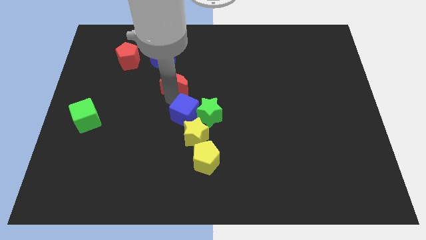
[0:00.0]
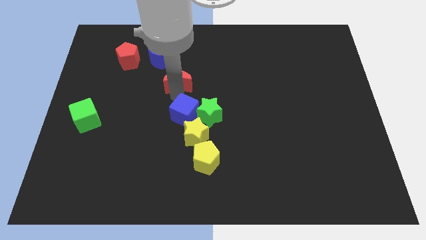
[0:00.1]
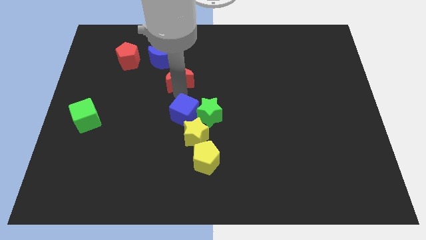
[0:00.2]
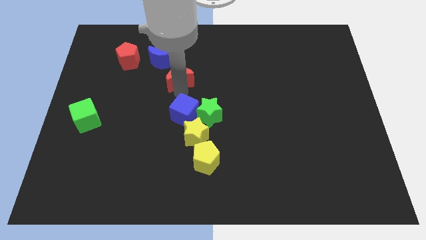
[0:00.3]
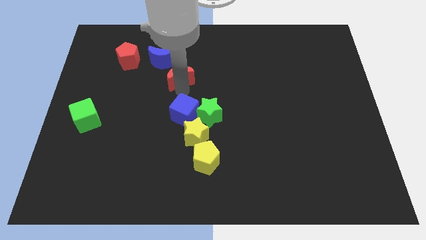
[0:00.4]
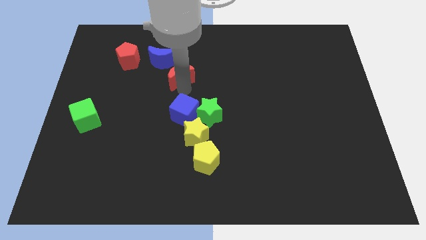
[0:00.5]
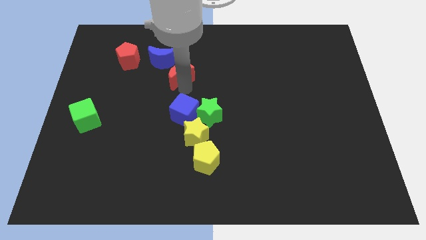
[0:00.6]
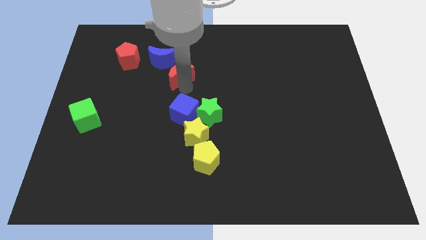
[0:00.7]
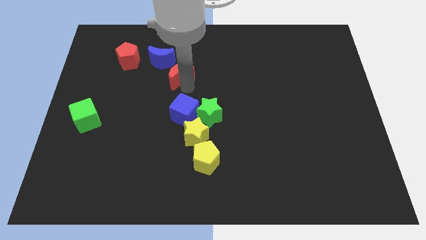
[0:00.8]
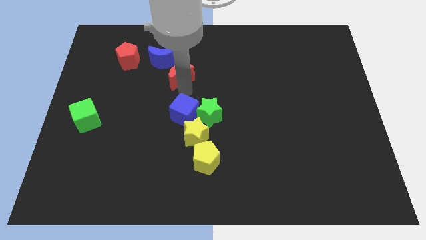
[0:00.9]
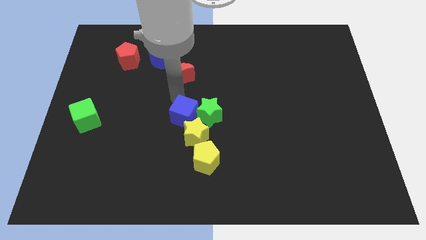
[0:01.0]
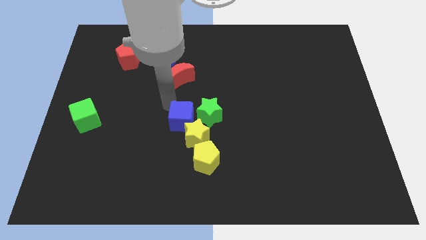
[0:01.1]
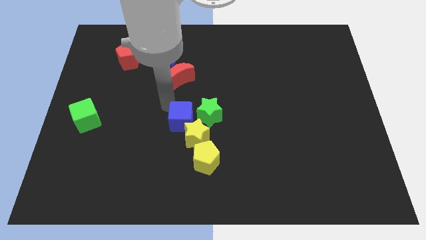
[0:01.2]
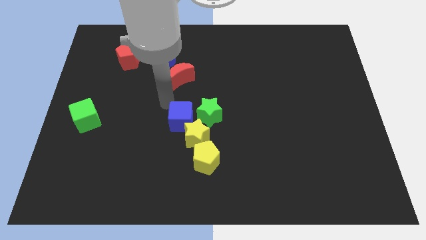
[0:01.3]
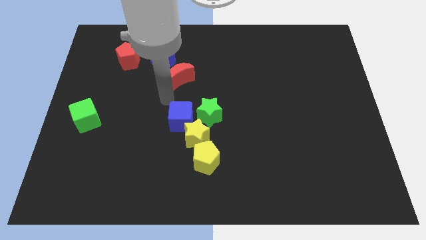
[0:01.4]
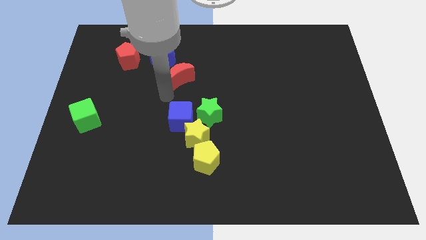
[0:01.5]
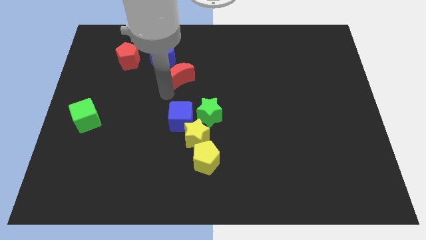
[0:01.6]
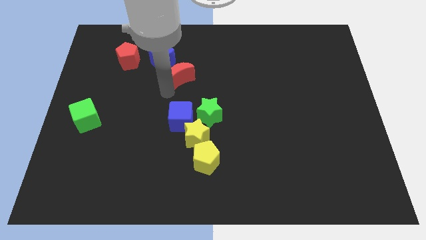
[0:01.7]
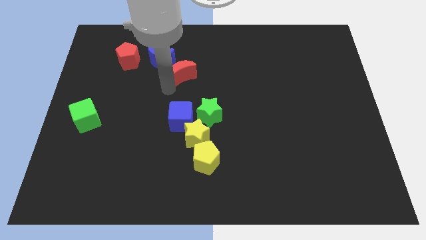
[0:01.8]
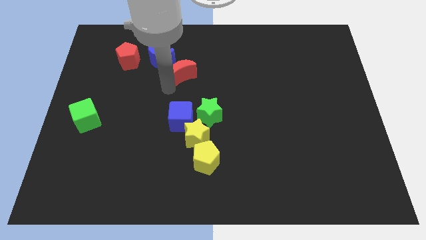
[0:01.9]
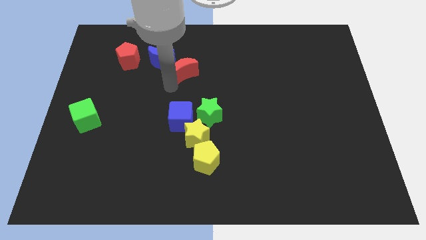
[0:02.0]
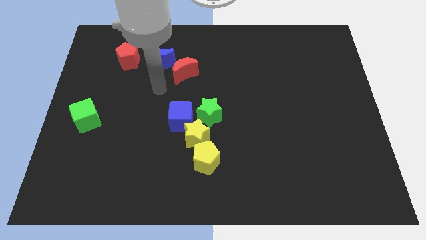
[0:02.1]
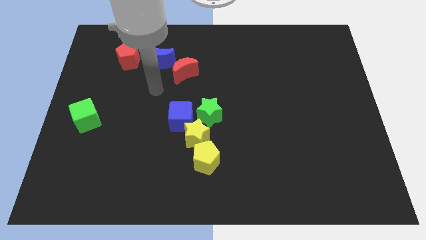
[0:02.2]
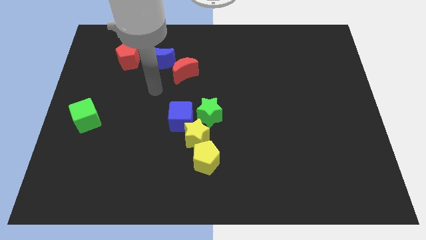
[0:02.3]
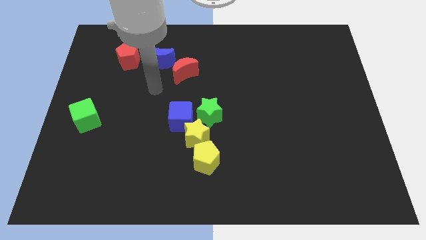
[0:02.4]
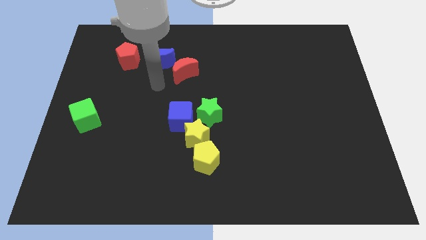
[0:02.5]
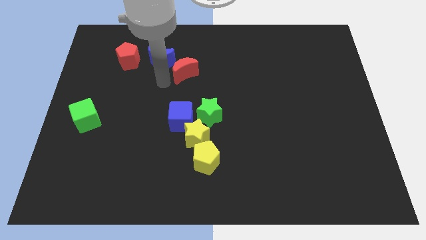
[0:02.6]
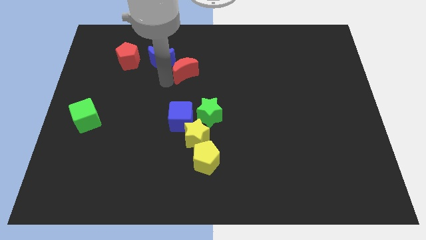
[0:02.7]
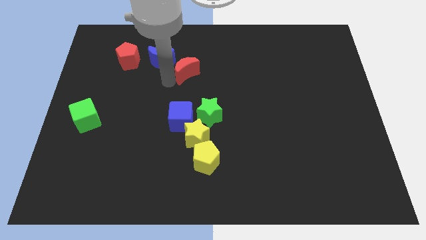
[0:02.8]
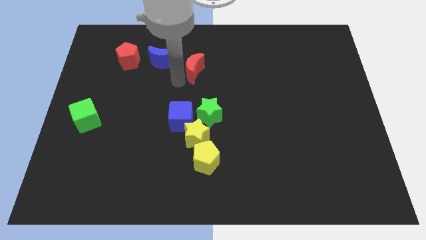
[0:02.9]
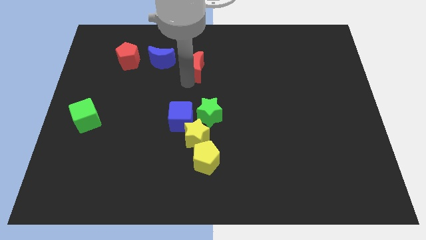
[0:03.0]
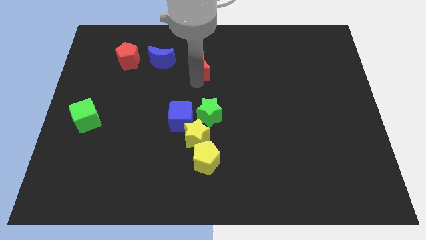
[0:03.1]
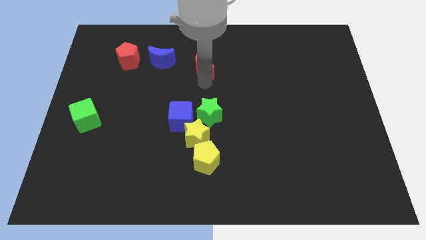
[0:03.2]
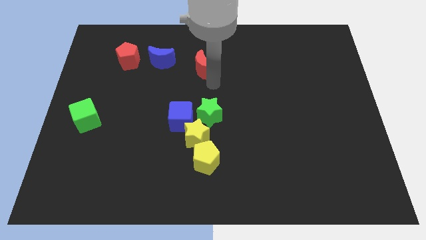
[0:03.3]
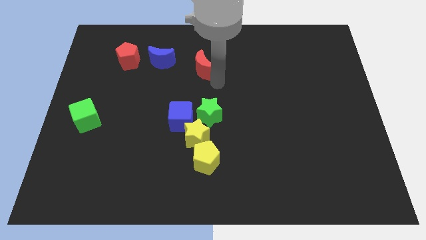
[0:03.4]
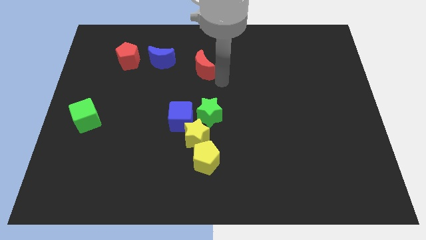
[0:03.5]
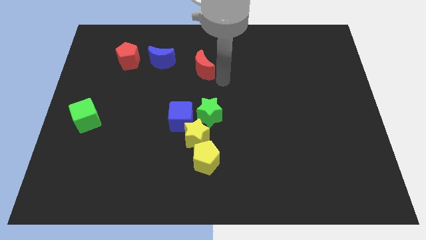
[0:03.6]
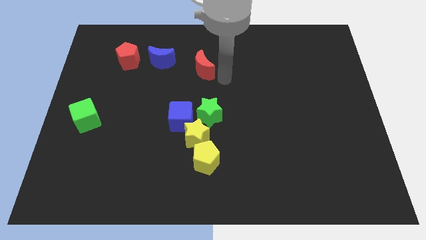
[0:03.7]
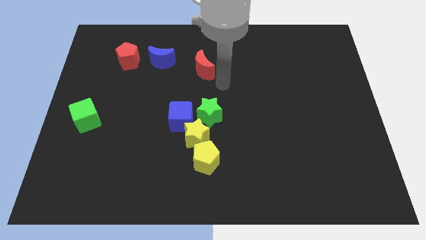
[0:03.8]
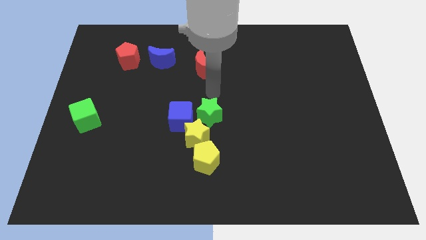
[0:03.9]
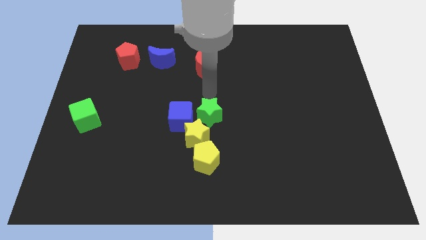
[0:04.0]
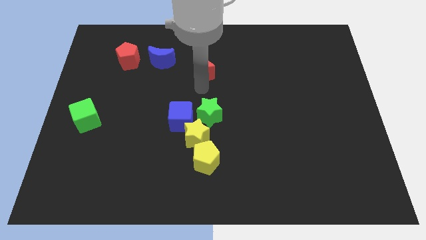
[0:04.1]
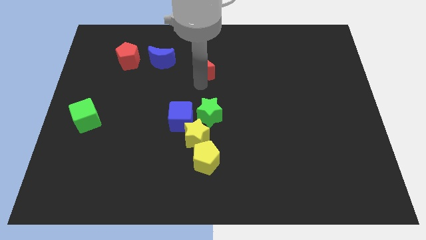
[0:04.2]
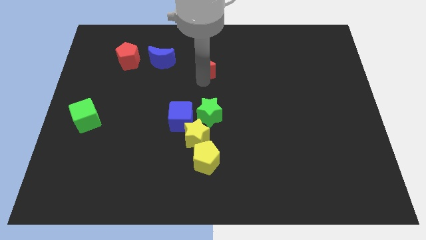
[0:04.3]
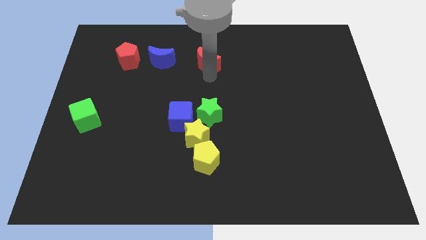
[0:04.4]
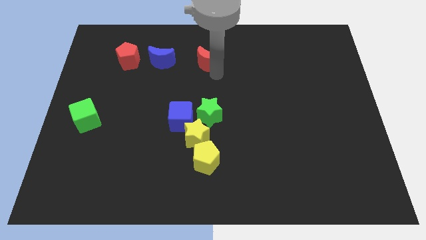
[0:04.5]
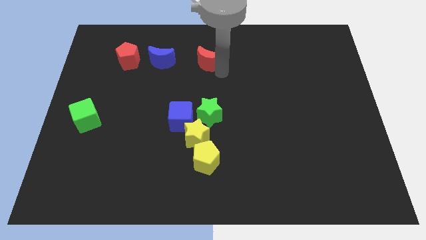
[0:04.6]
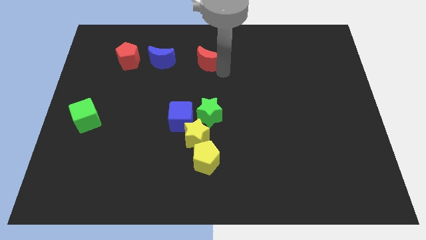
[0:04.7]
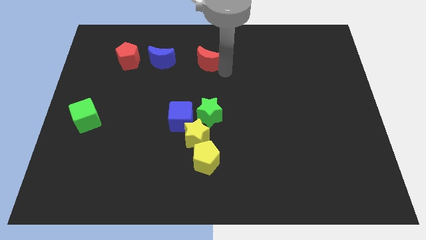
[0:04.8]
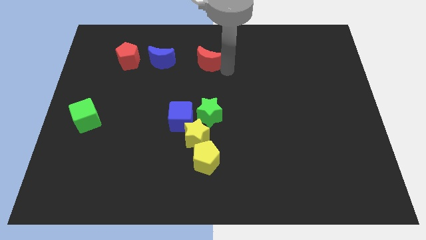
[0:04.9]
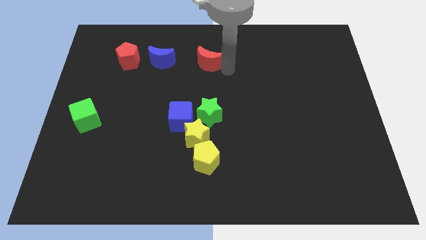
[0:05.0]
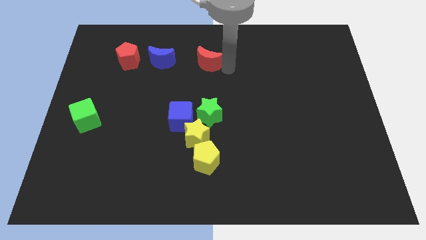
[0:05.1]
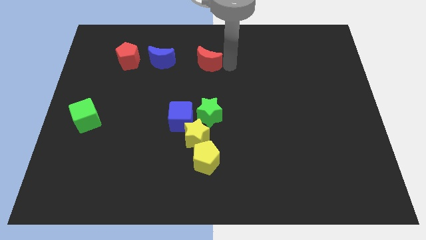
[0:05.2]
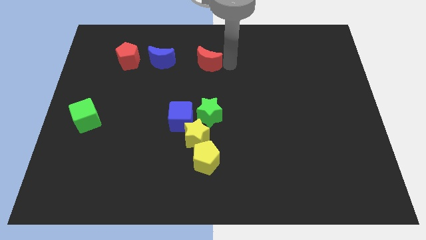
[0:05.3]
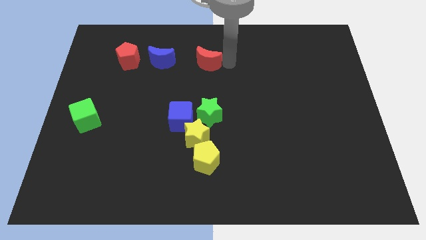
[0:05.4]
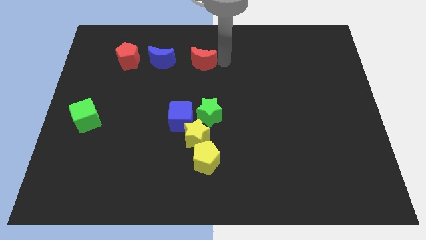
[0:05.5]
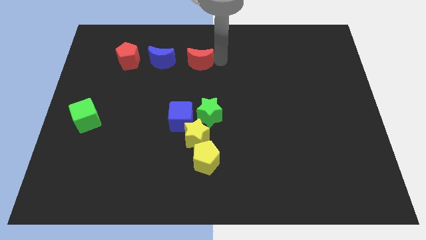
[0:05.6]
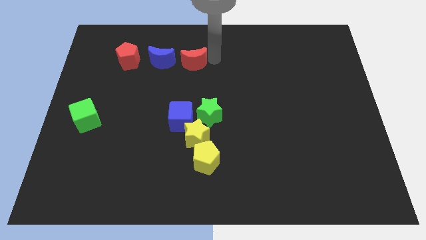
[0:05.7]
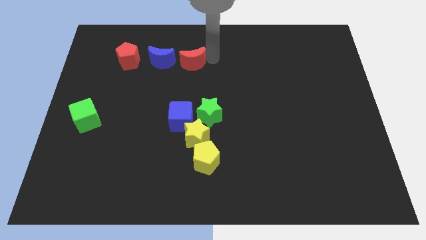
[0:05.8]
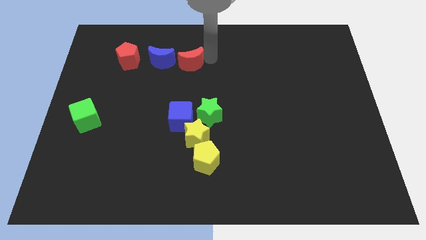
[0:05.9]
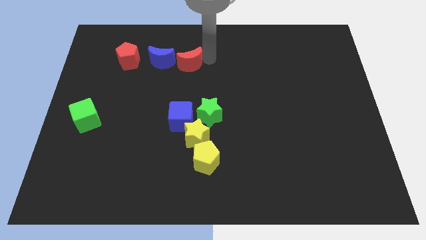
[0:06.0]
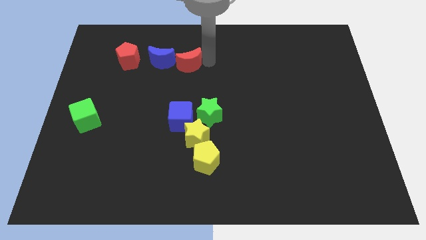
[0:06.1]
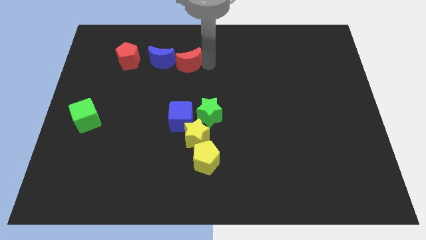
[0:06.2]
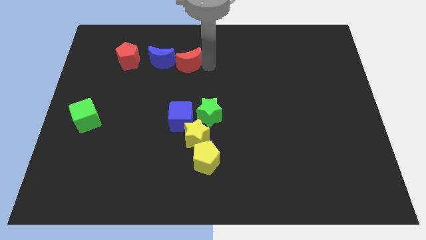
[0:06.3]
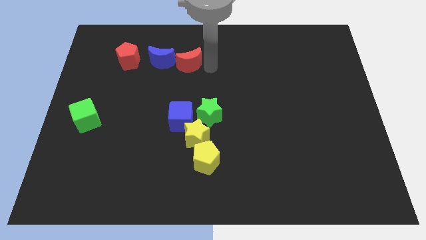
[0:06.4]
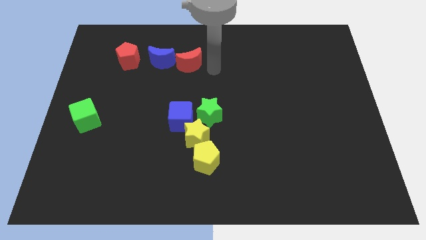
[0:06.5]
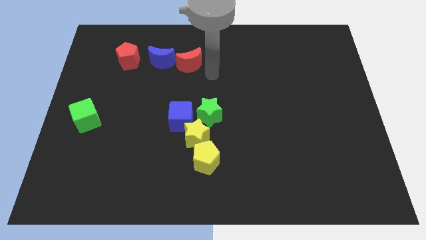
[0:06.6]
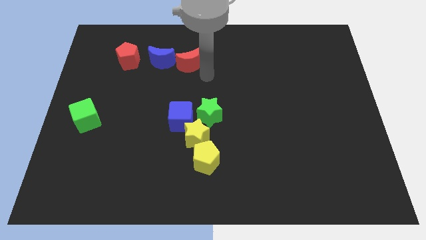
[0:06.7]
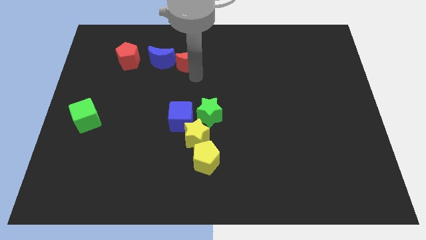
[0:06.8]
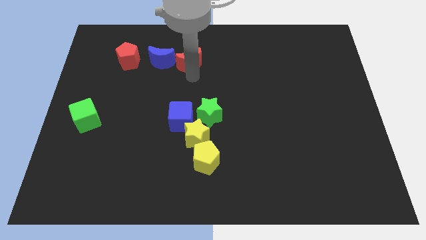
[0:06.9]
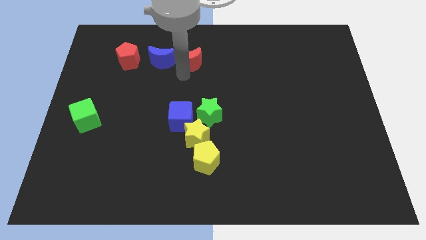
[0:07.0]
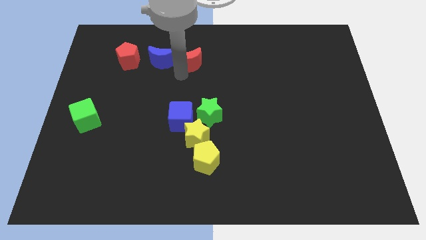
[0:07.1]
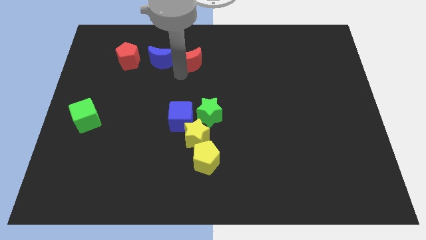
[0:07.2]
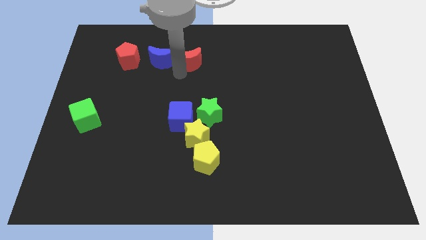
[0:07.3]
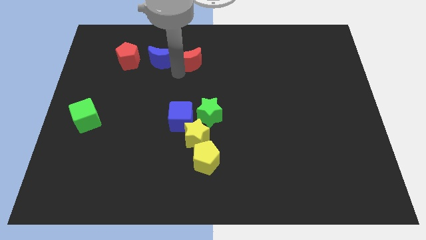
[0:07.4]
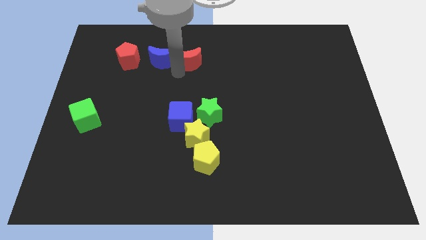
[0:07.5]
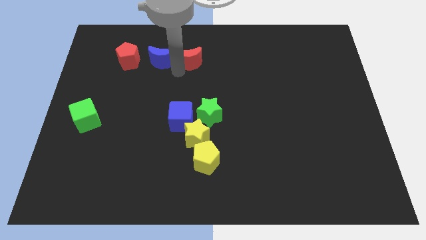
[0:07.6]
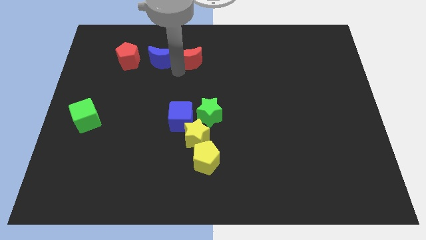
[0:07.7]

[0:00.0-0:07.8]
place the red crescent next to the blue crescent

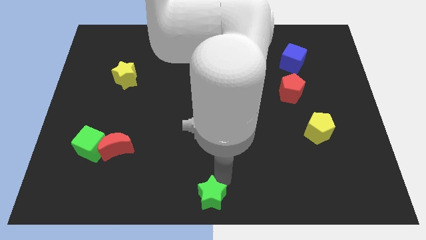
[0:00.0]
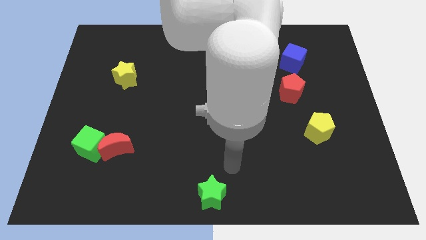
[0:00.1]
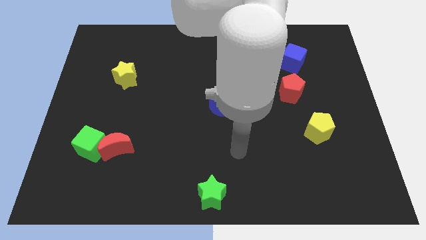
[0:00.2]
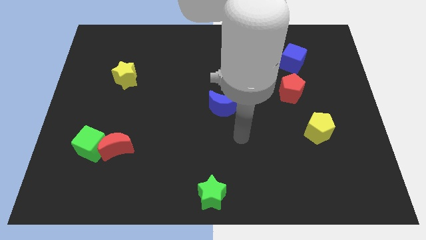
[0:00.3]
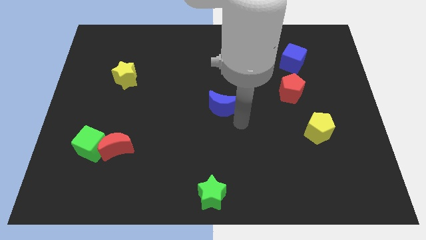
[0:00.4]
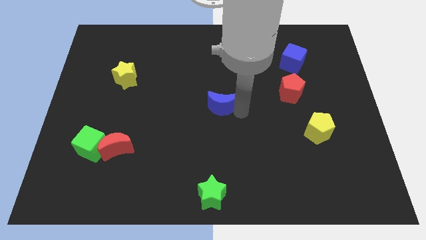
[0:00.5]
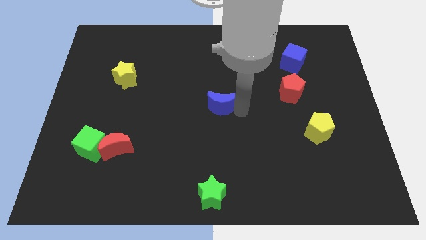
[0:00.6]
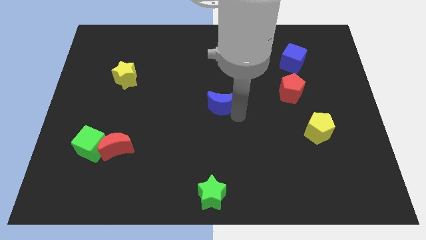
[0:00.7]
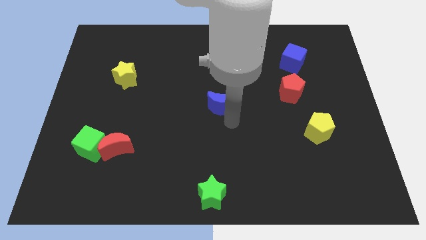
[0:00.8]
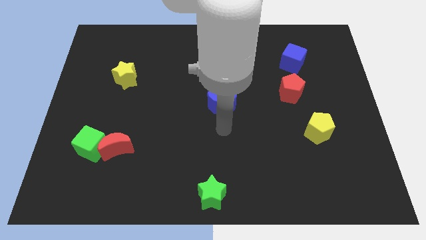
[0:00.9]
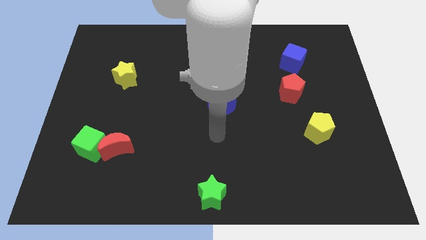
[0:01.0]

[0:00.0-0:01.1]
slightly push the blue moon towards the center of the board
